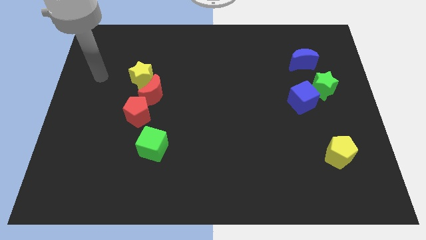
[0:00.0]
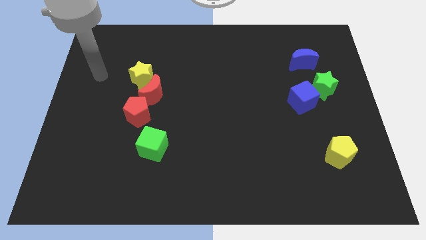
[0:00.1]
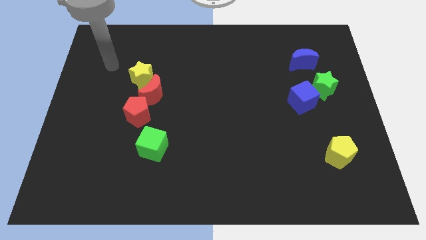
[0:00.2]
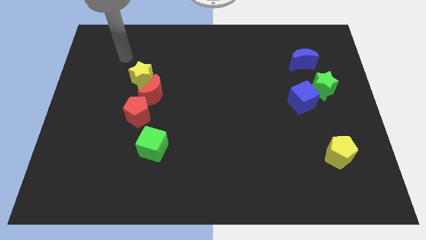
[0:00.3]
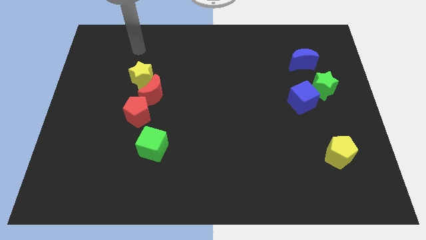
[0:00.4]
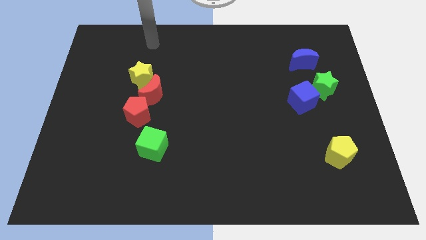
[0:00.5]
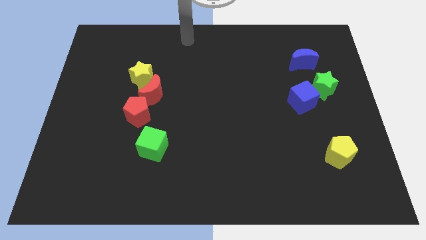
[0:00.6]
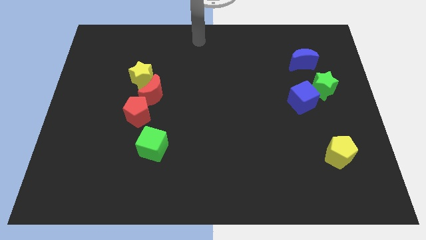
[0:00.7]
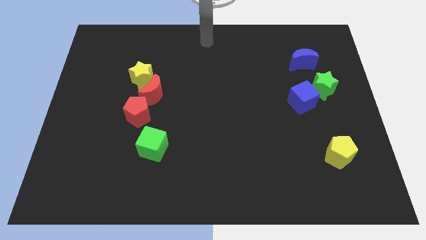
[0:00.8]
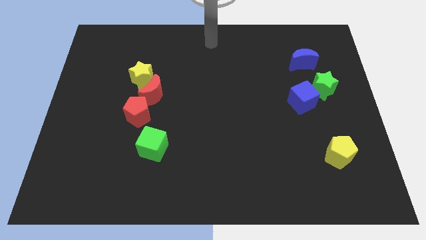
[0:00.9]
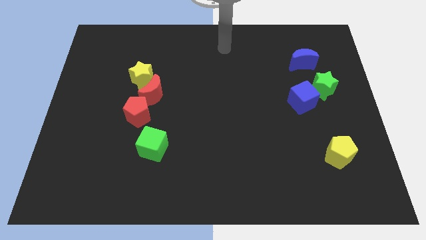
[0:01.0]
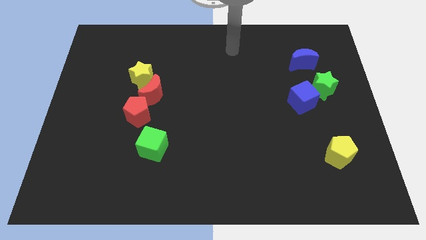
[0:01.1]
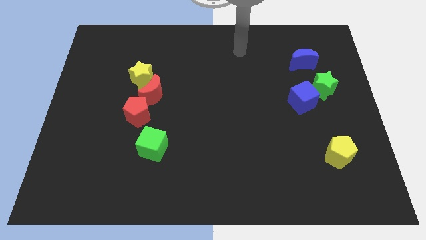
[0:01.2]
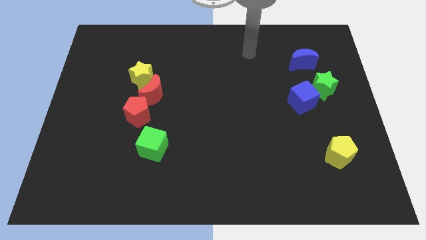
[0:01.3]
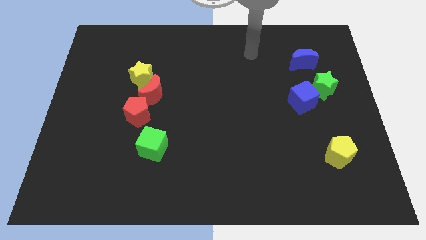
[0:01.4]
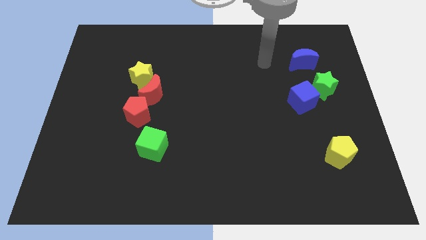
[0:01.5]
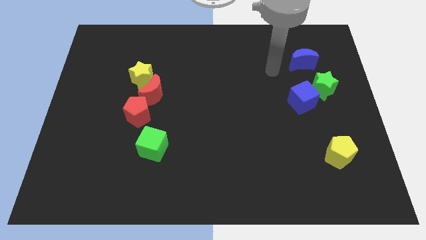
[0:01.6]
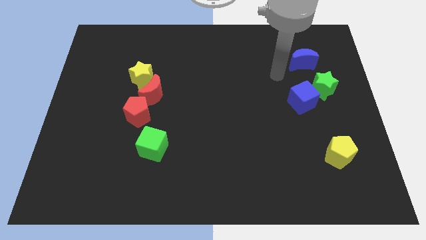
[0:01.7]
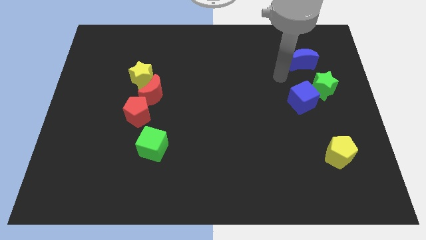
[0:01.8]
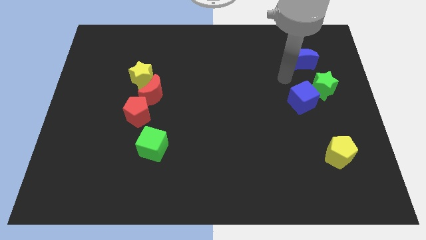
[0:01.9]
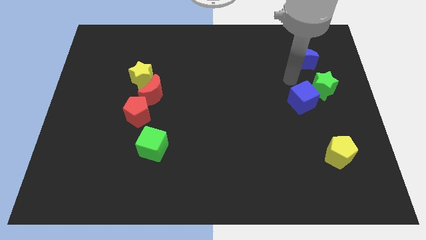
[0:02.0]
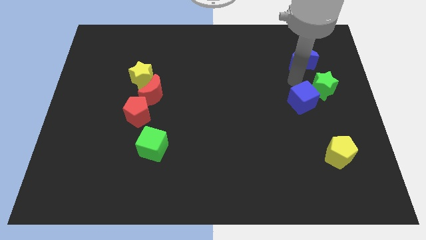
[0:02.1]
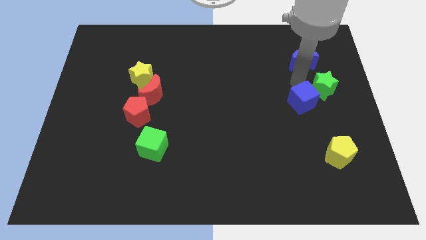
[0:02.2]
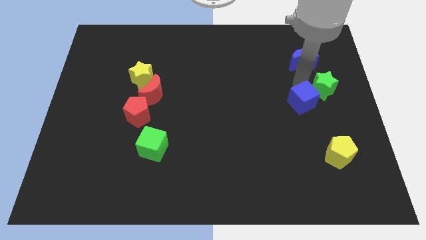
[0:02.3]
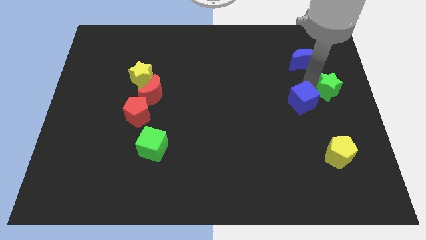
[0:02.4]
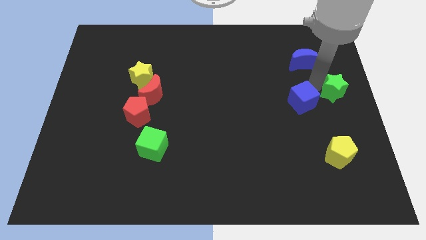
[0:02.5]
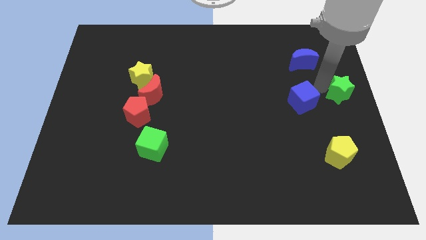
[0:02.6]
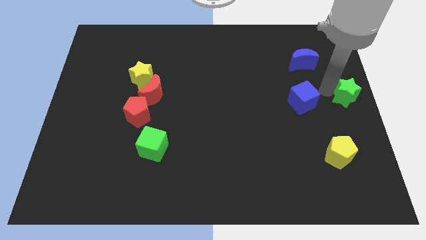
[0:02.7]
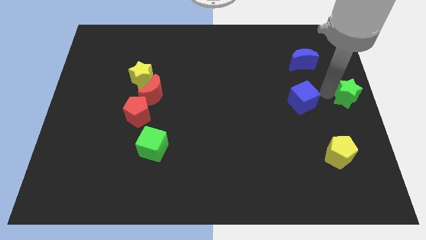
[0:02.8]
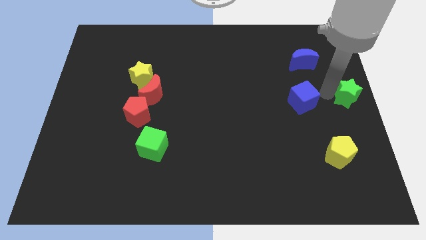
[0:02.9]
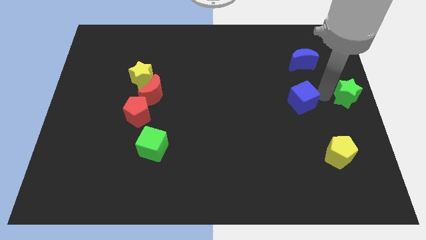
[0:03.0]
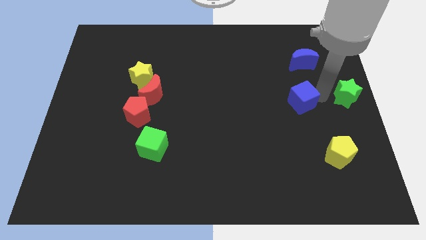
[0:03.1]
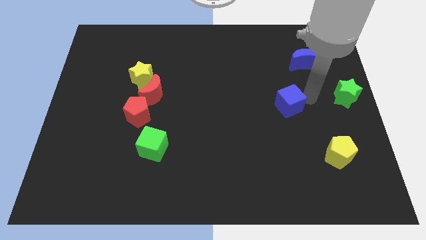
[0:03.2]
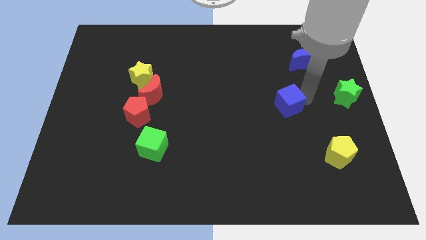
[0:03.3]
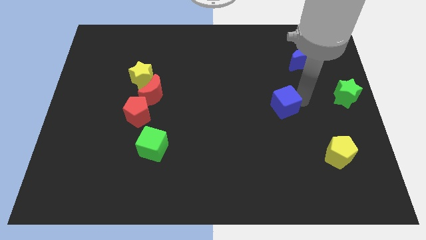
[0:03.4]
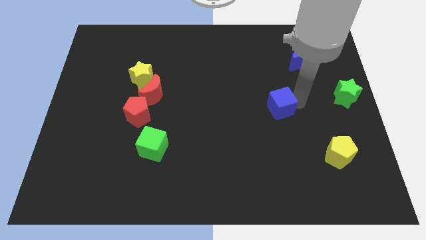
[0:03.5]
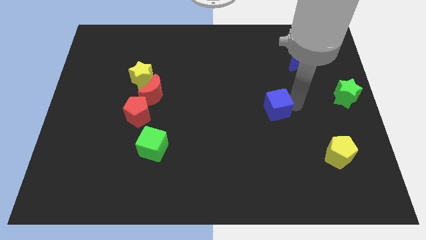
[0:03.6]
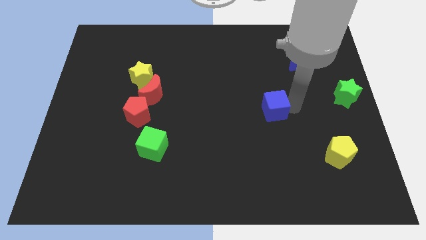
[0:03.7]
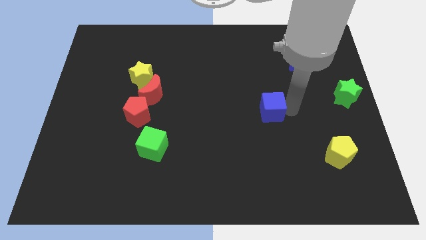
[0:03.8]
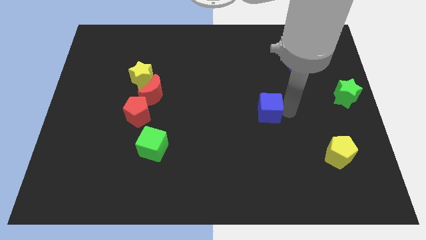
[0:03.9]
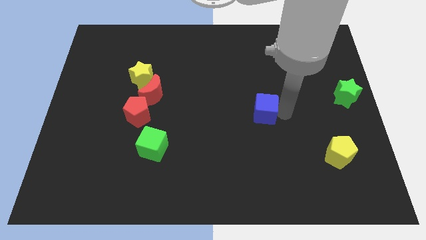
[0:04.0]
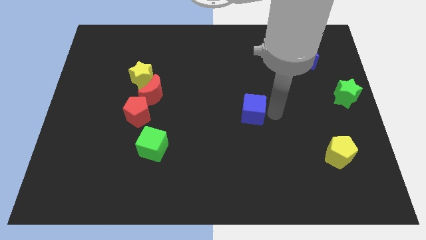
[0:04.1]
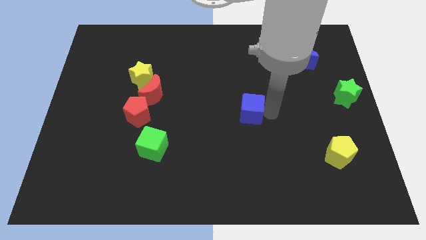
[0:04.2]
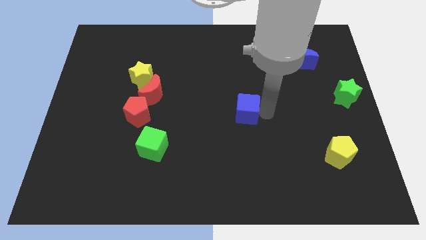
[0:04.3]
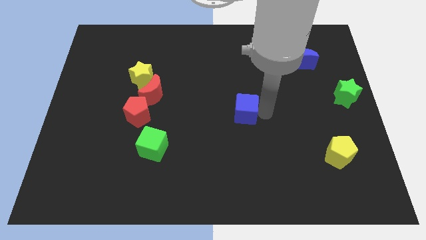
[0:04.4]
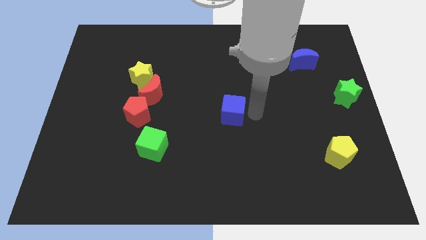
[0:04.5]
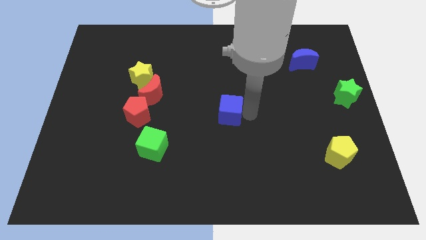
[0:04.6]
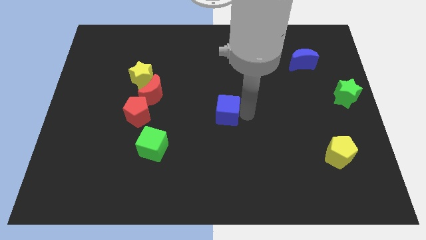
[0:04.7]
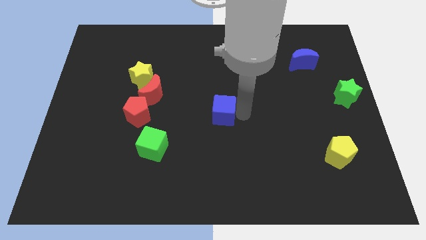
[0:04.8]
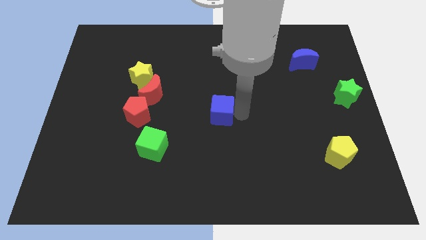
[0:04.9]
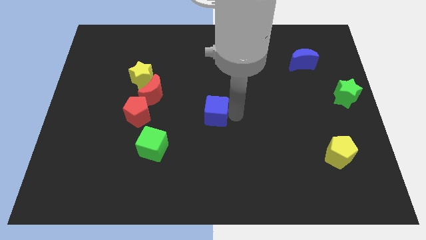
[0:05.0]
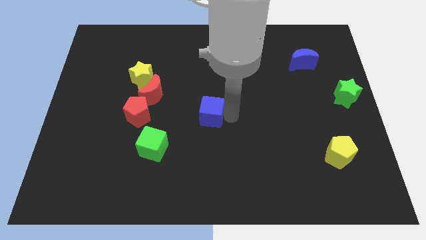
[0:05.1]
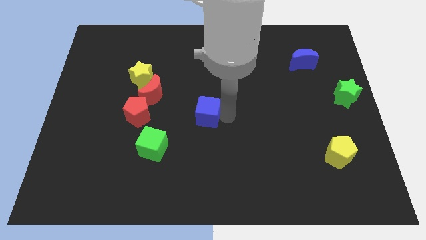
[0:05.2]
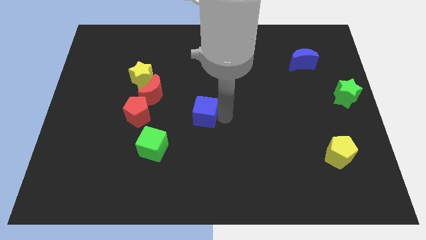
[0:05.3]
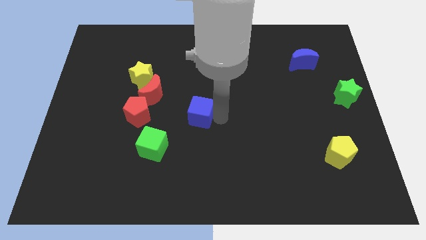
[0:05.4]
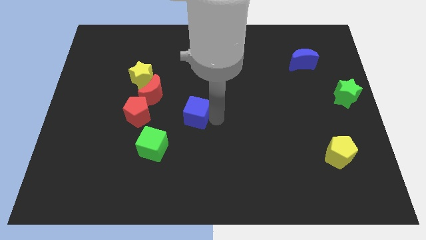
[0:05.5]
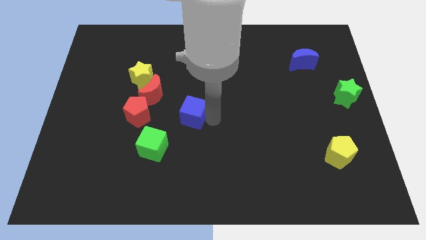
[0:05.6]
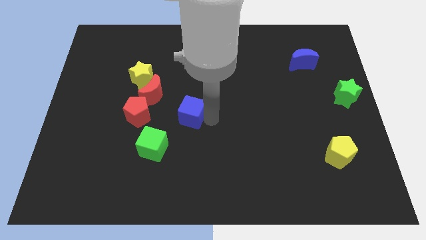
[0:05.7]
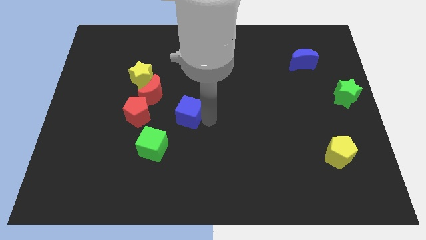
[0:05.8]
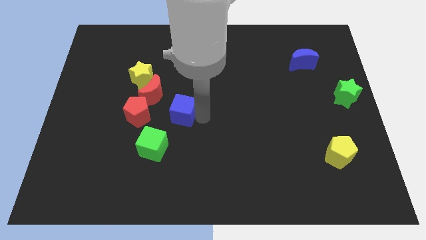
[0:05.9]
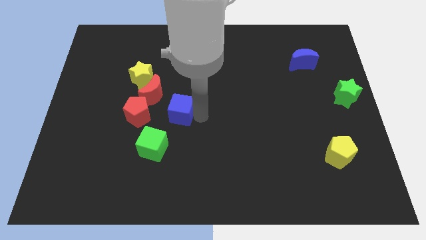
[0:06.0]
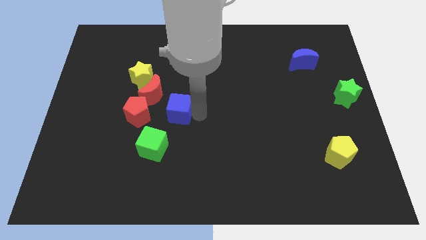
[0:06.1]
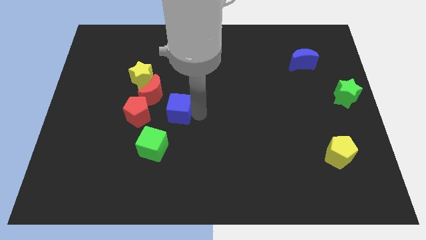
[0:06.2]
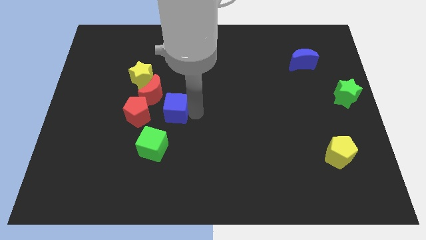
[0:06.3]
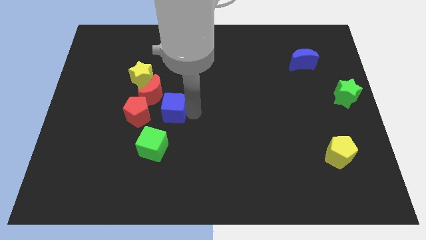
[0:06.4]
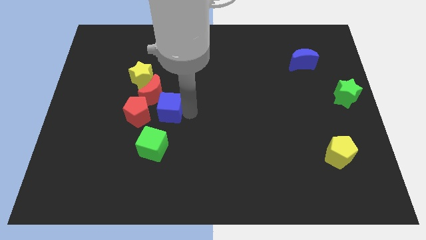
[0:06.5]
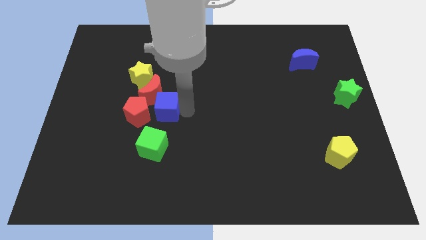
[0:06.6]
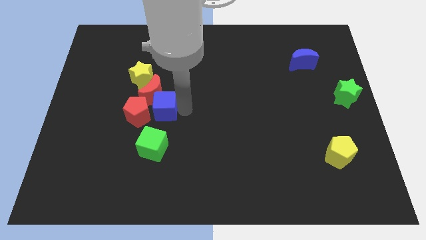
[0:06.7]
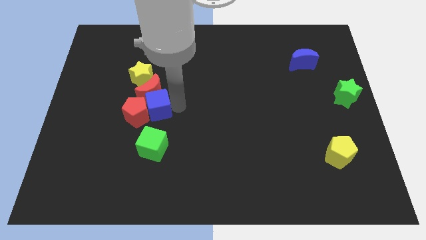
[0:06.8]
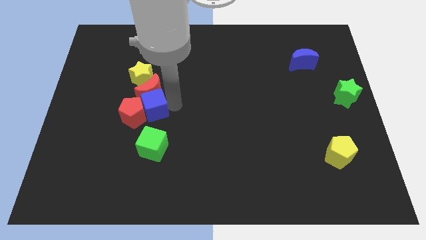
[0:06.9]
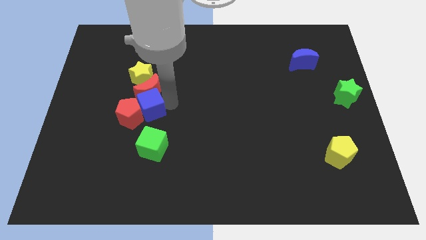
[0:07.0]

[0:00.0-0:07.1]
push the blue cube towards the red pentagon

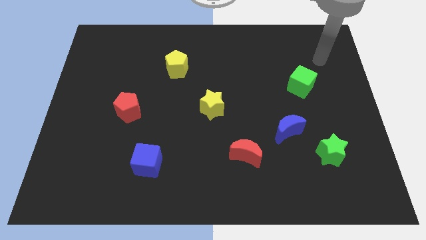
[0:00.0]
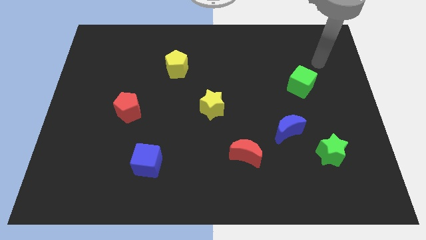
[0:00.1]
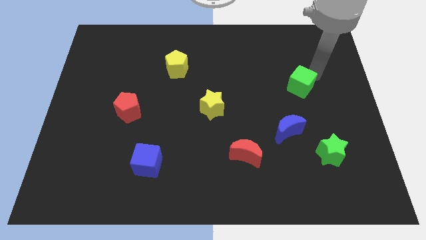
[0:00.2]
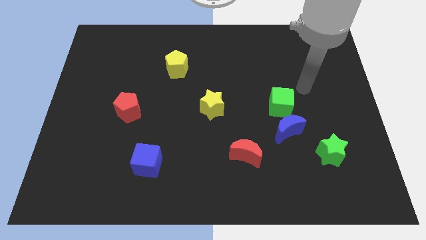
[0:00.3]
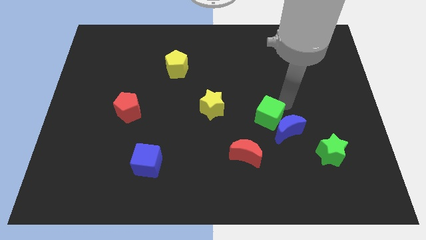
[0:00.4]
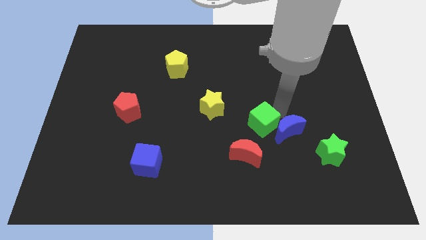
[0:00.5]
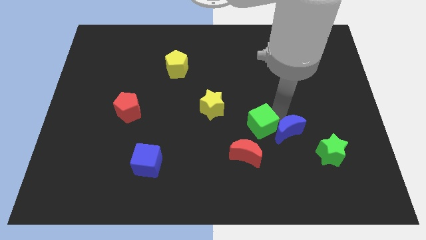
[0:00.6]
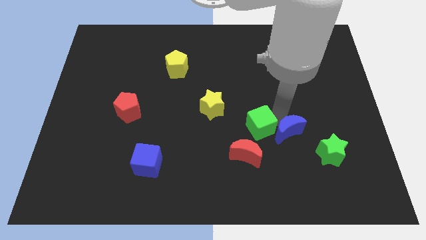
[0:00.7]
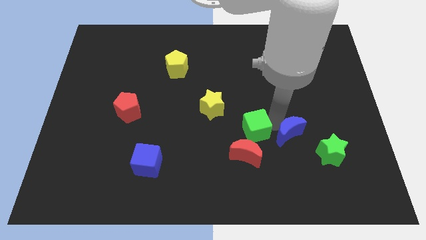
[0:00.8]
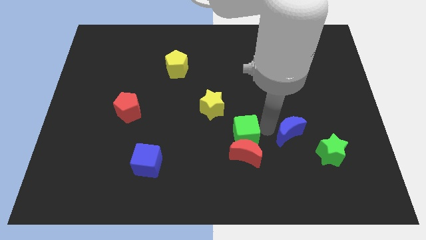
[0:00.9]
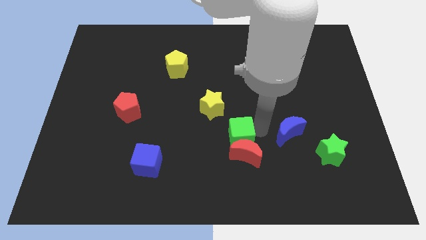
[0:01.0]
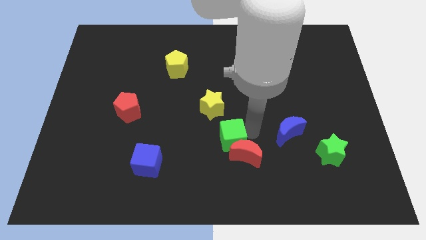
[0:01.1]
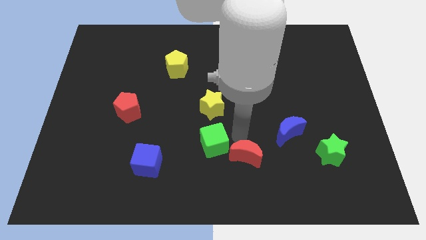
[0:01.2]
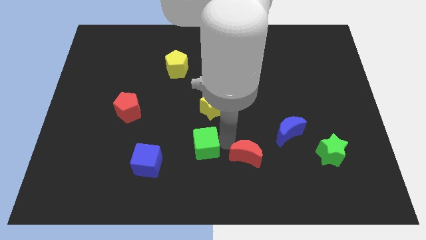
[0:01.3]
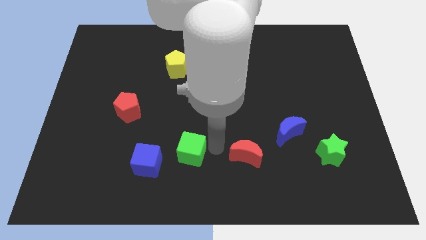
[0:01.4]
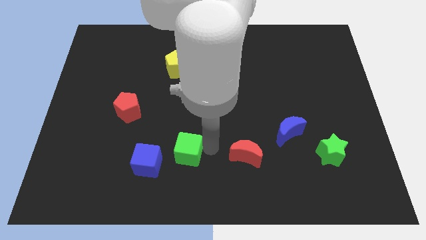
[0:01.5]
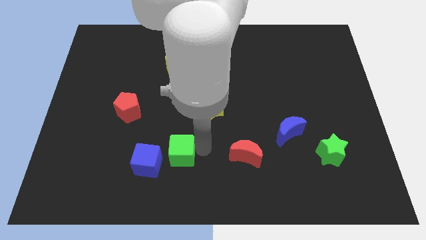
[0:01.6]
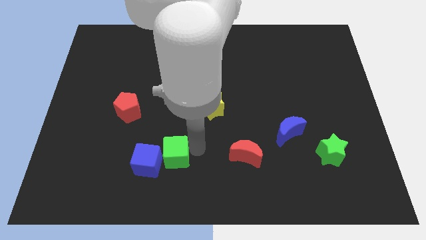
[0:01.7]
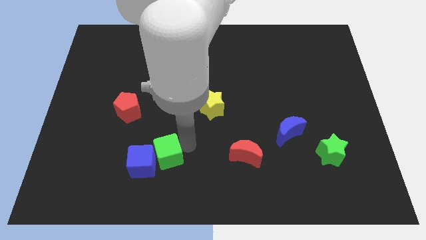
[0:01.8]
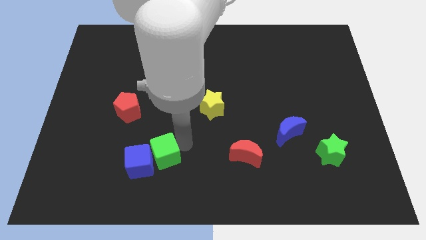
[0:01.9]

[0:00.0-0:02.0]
slide the green cube to the blue cube
